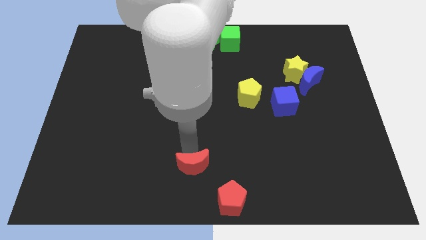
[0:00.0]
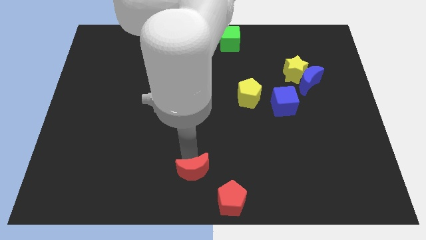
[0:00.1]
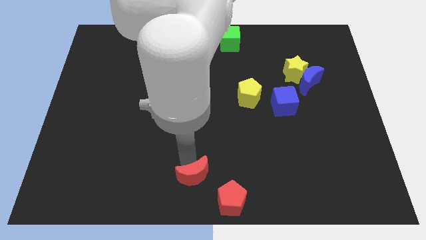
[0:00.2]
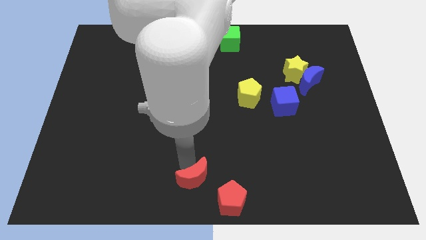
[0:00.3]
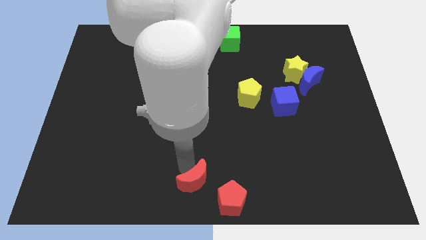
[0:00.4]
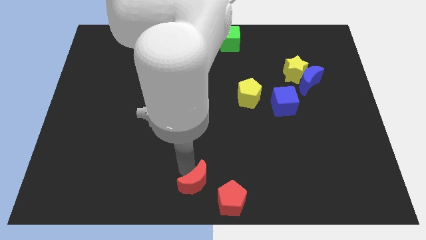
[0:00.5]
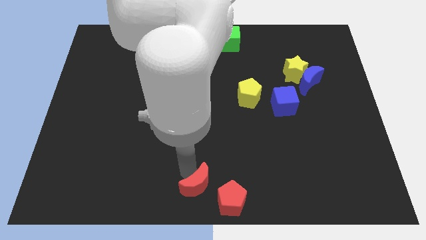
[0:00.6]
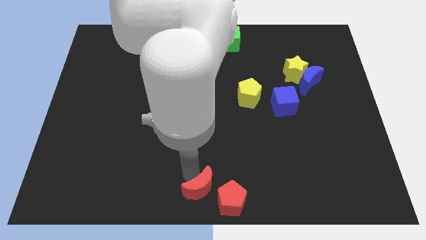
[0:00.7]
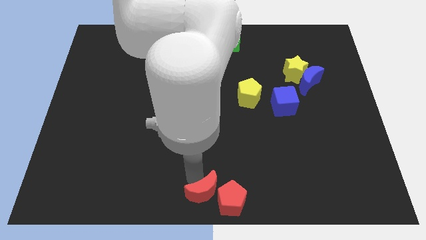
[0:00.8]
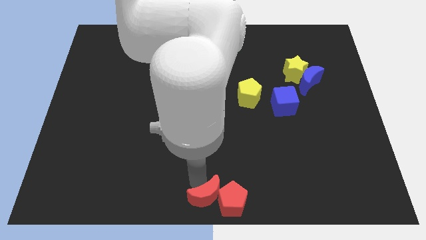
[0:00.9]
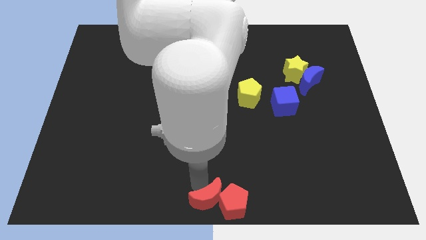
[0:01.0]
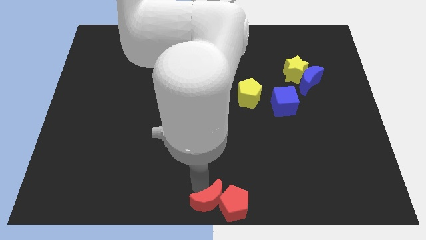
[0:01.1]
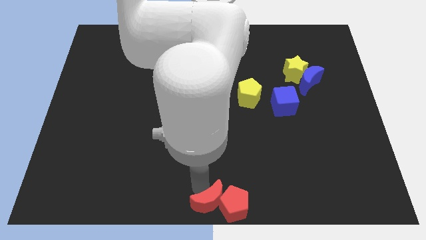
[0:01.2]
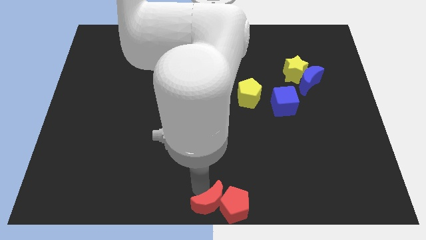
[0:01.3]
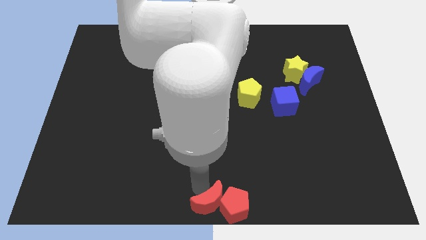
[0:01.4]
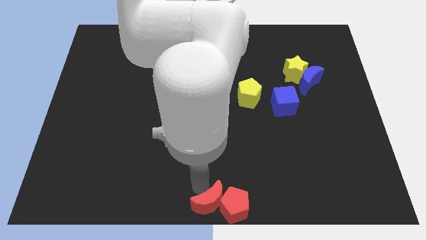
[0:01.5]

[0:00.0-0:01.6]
push the red moon into the left of the red pentagon

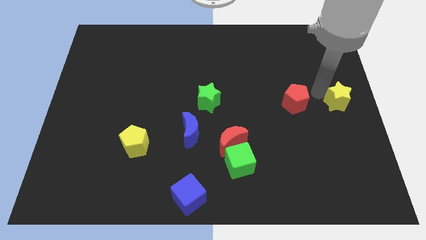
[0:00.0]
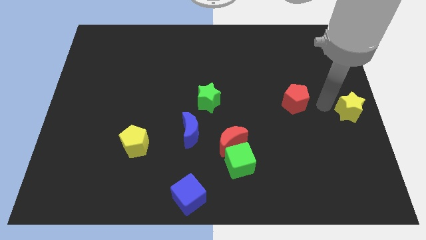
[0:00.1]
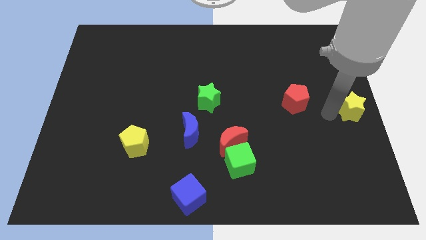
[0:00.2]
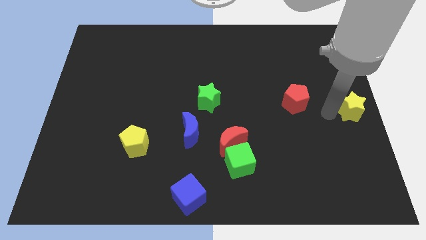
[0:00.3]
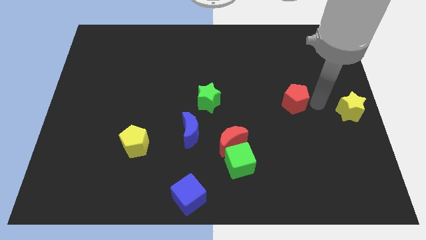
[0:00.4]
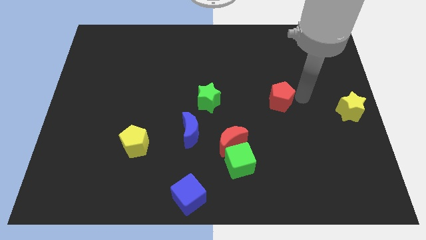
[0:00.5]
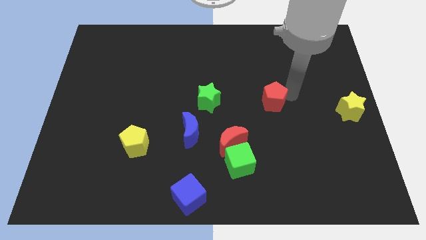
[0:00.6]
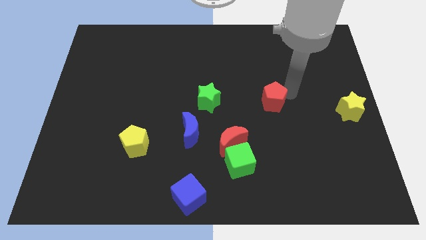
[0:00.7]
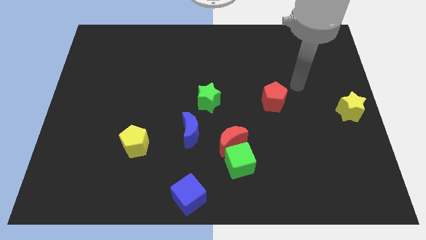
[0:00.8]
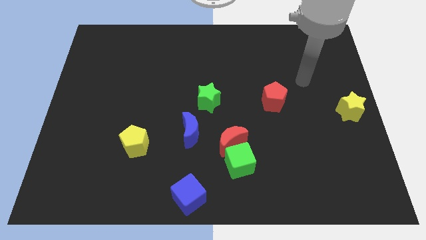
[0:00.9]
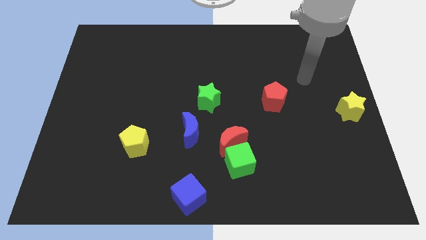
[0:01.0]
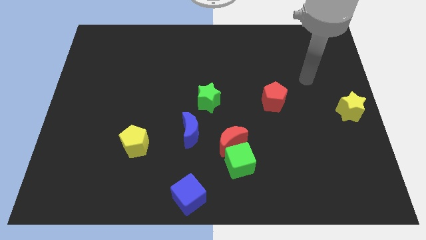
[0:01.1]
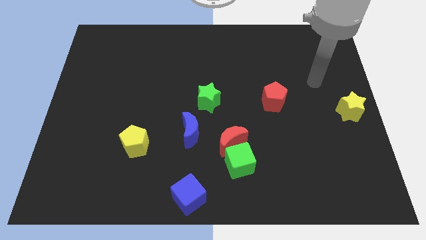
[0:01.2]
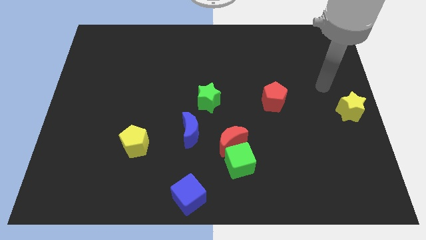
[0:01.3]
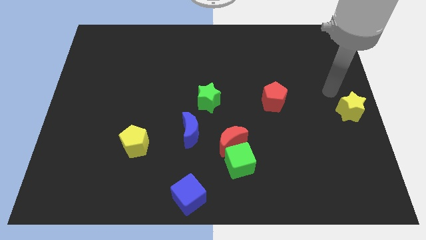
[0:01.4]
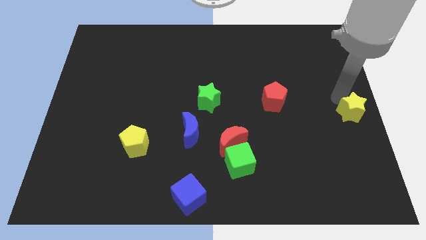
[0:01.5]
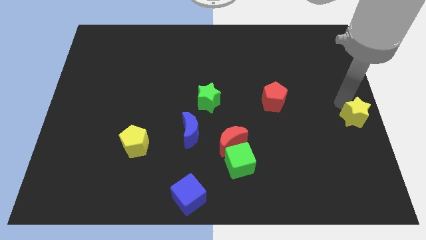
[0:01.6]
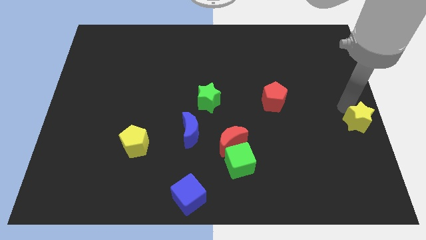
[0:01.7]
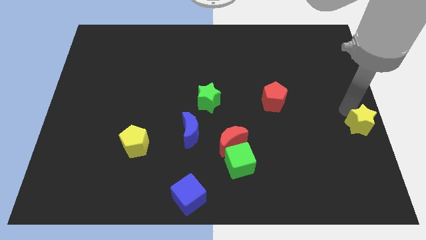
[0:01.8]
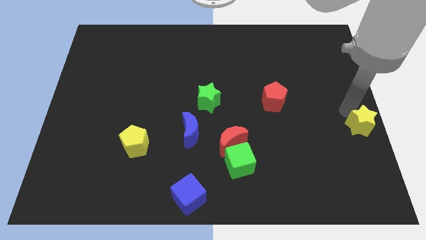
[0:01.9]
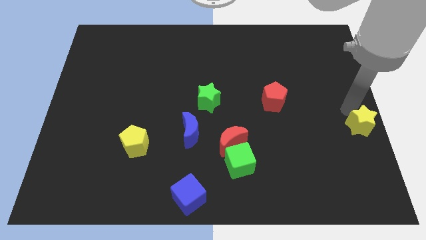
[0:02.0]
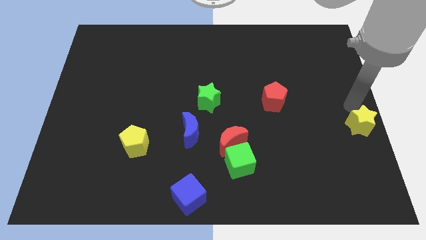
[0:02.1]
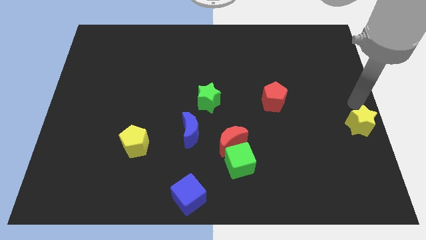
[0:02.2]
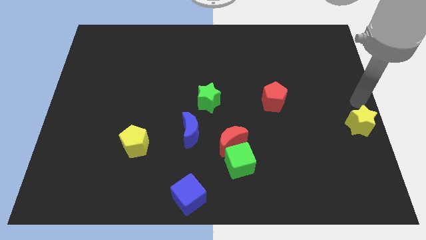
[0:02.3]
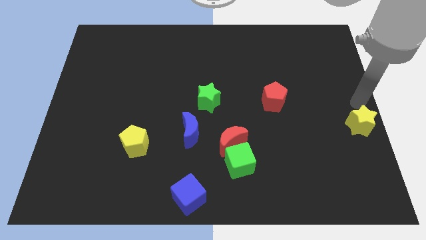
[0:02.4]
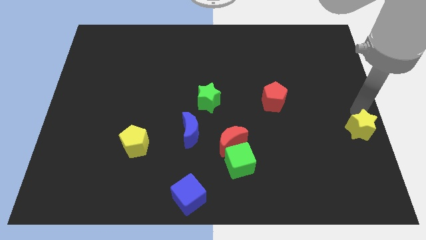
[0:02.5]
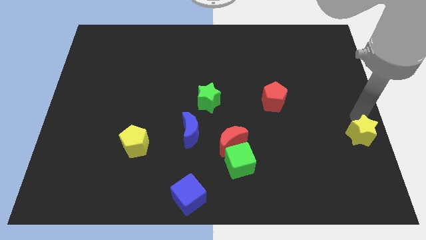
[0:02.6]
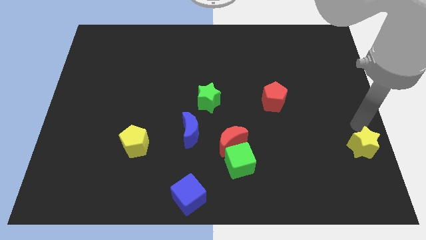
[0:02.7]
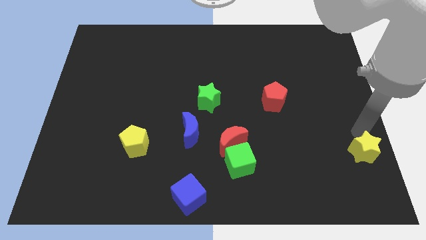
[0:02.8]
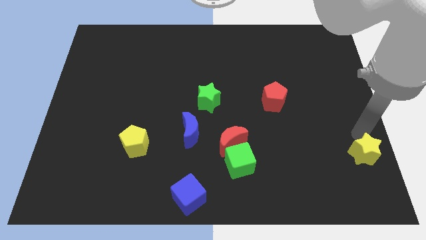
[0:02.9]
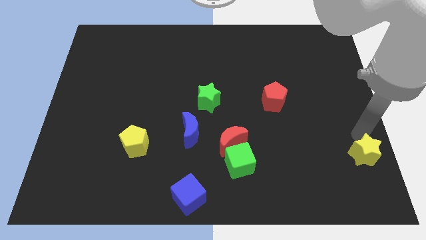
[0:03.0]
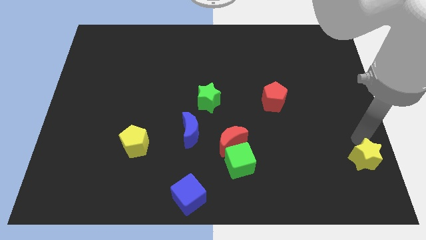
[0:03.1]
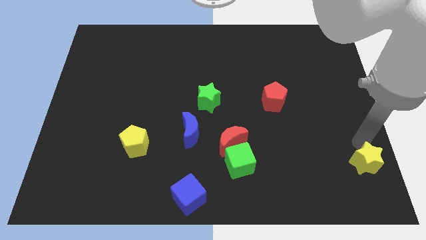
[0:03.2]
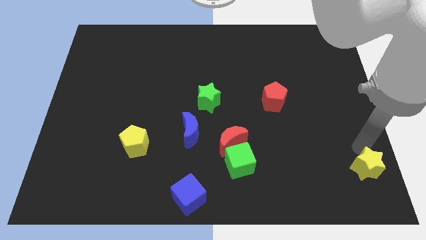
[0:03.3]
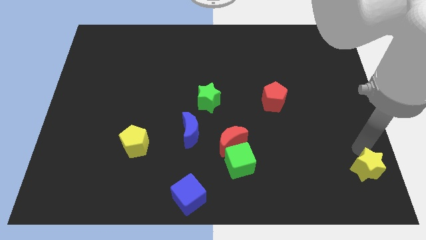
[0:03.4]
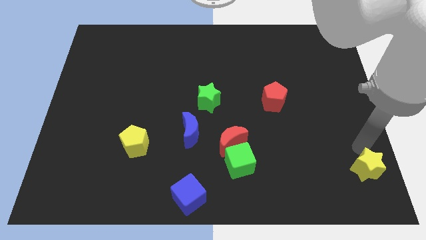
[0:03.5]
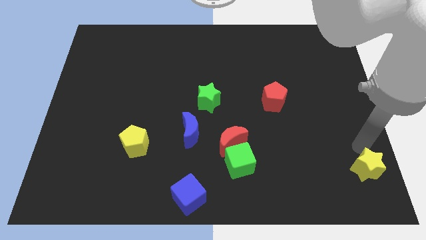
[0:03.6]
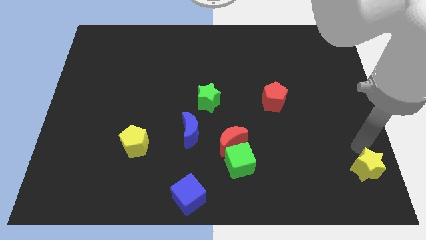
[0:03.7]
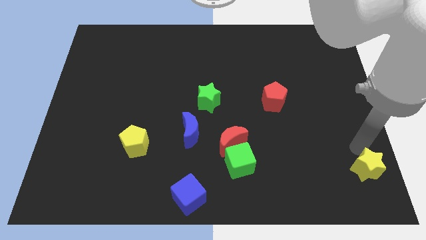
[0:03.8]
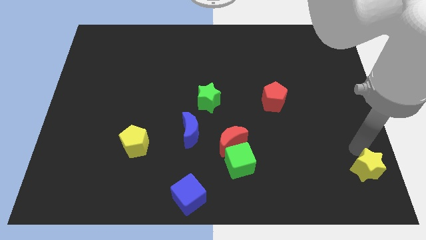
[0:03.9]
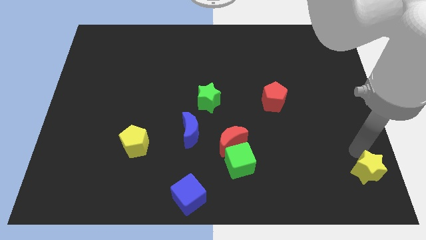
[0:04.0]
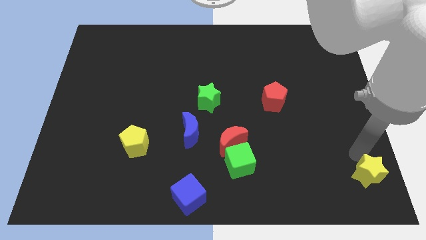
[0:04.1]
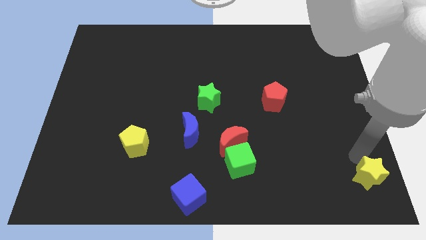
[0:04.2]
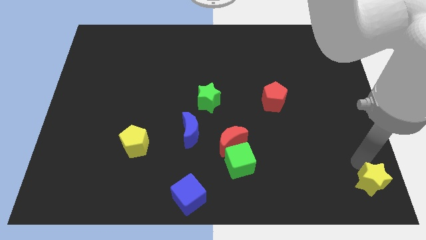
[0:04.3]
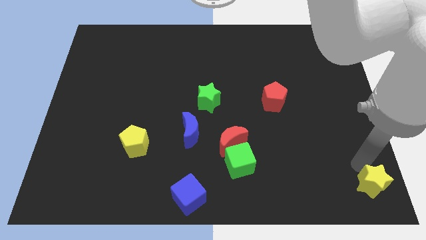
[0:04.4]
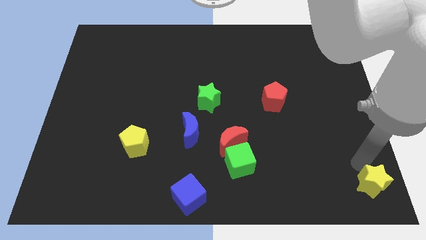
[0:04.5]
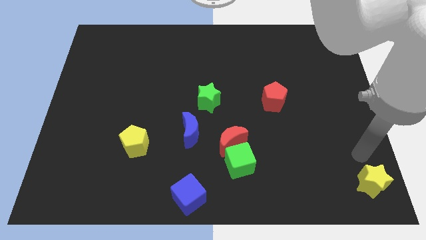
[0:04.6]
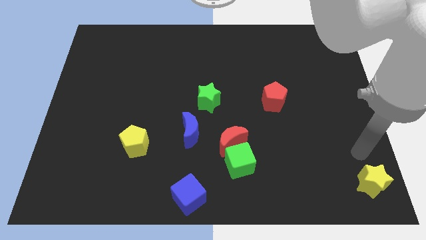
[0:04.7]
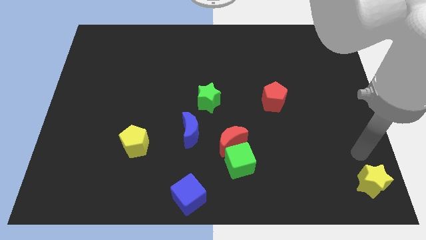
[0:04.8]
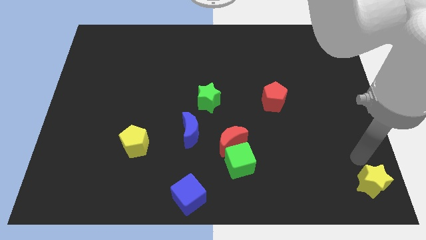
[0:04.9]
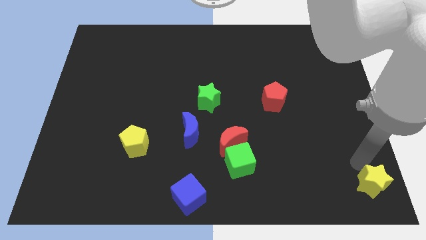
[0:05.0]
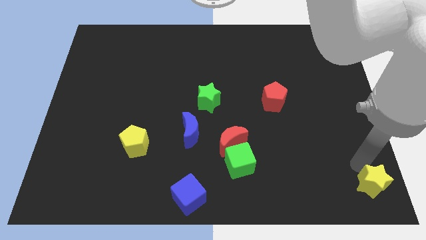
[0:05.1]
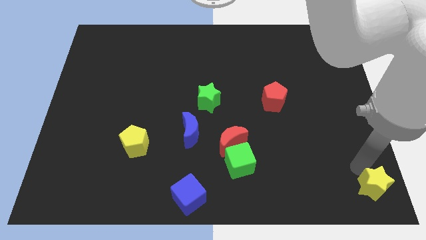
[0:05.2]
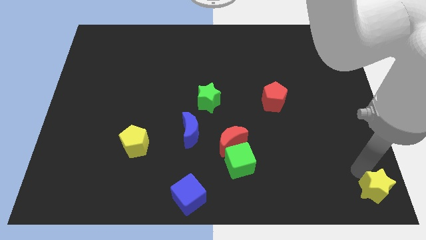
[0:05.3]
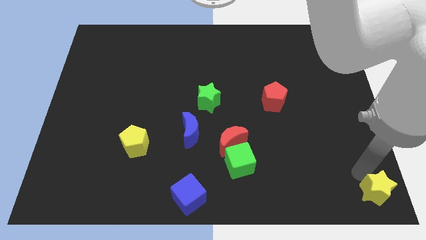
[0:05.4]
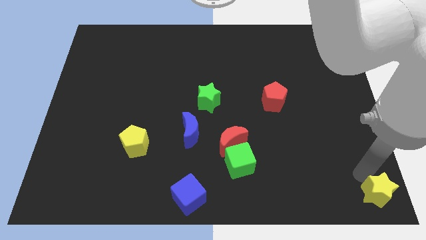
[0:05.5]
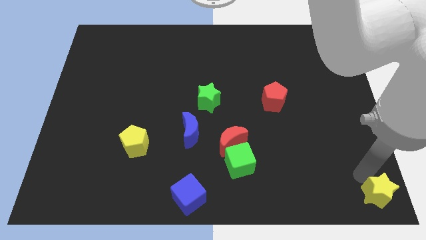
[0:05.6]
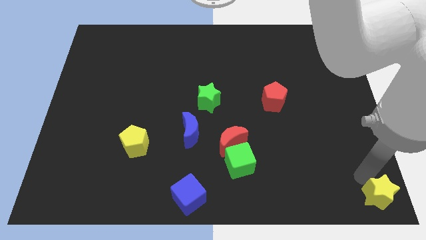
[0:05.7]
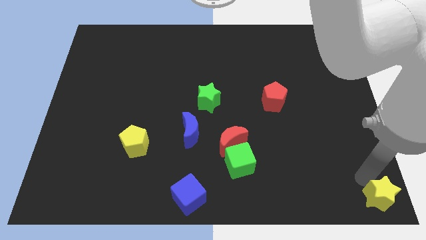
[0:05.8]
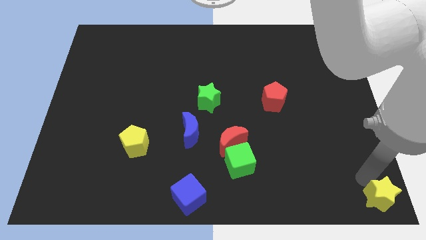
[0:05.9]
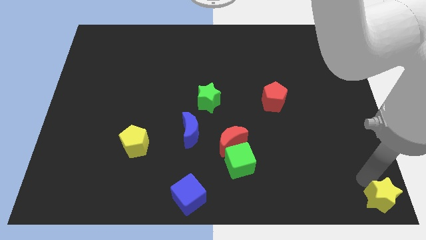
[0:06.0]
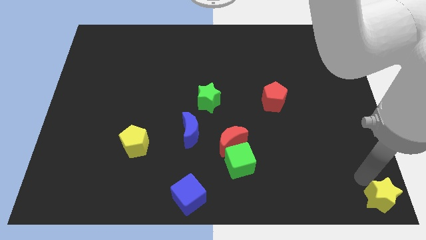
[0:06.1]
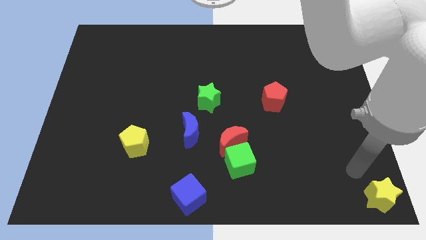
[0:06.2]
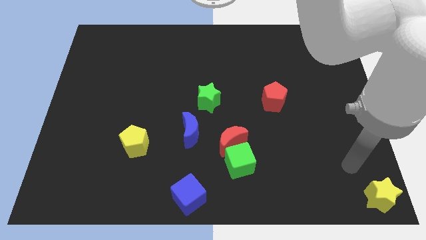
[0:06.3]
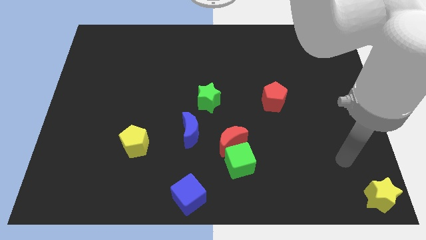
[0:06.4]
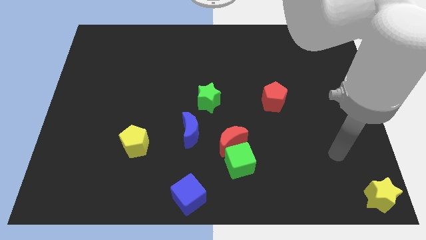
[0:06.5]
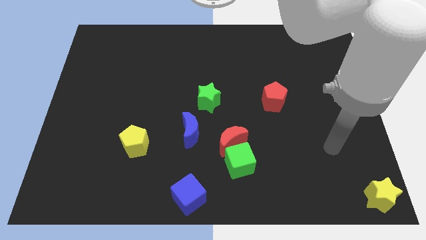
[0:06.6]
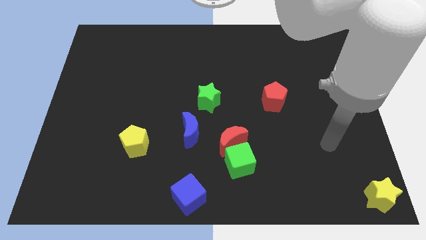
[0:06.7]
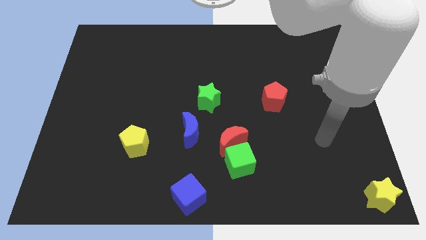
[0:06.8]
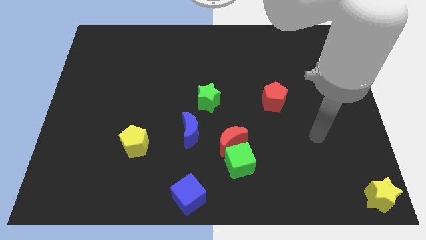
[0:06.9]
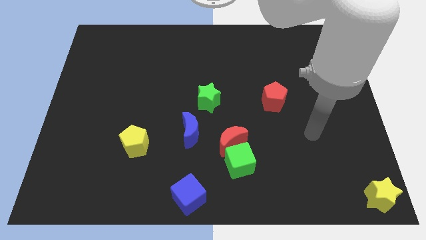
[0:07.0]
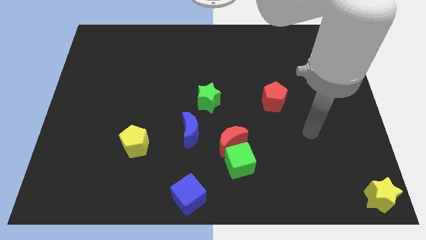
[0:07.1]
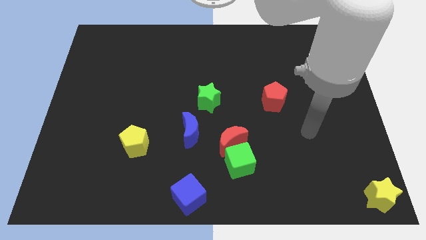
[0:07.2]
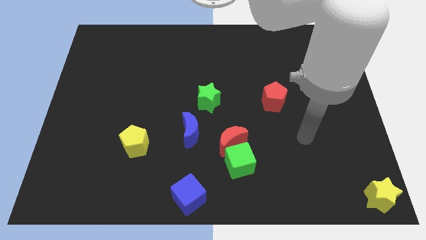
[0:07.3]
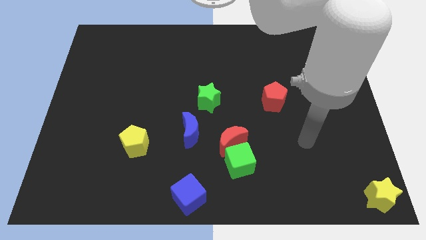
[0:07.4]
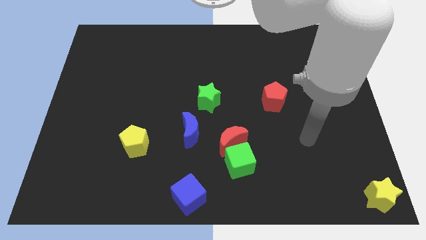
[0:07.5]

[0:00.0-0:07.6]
push the yellow star to the bottom right corner of the board
